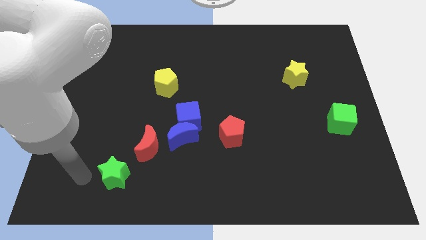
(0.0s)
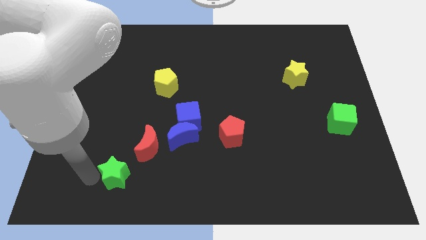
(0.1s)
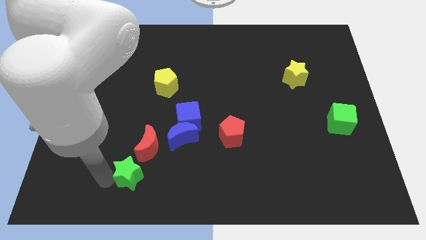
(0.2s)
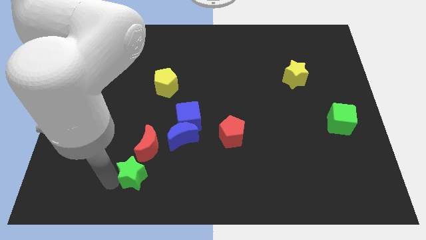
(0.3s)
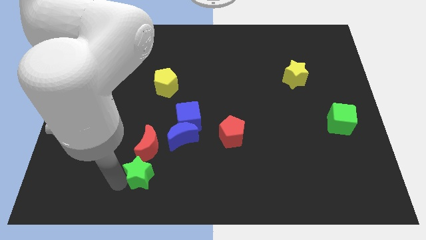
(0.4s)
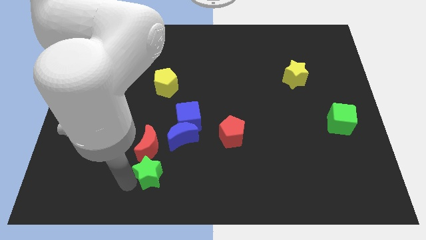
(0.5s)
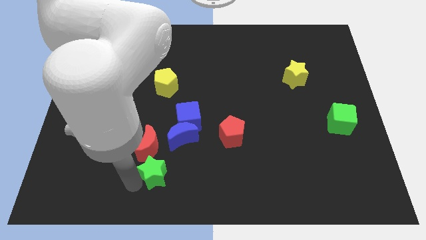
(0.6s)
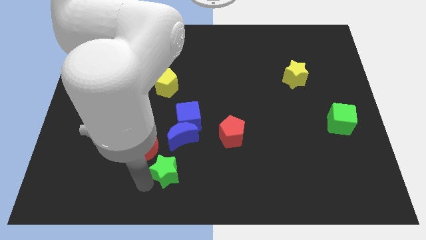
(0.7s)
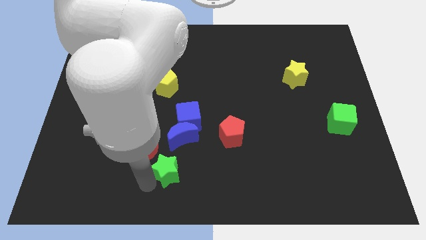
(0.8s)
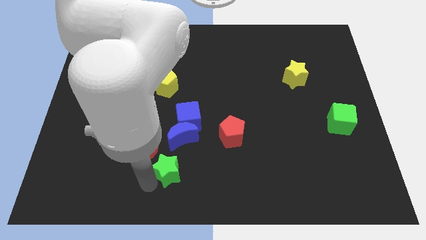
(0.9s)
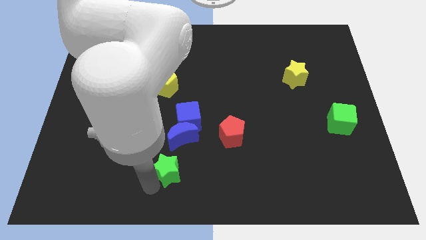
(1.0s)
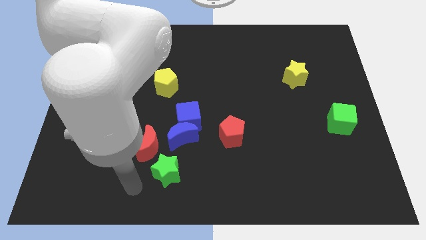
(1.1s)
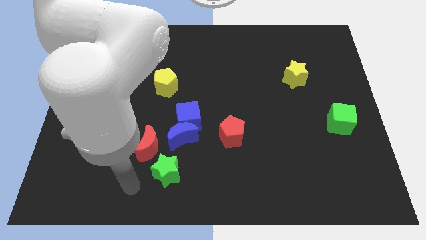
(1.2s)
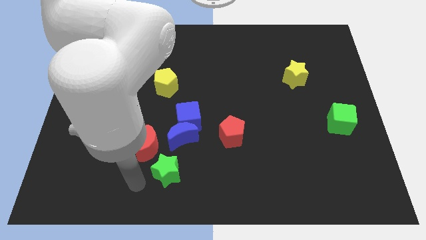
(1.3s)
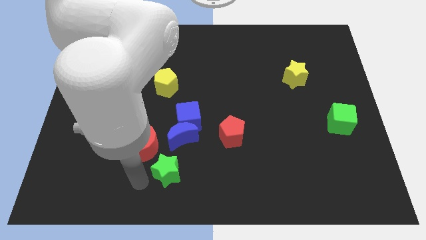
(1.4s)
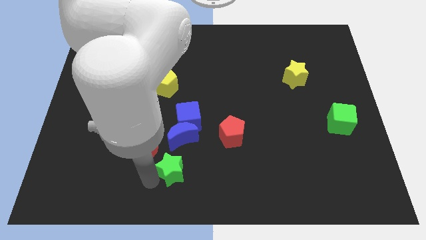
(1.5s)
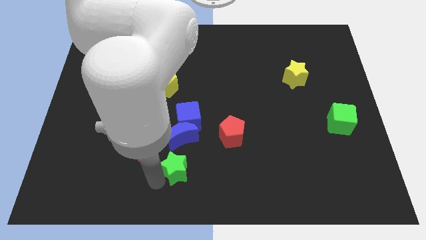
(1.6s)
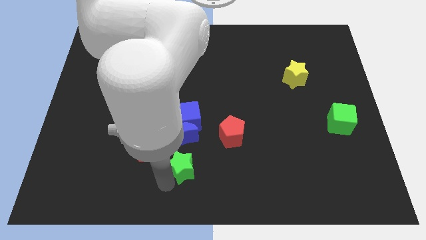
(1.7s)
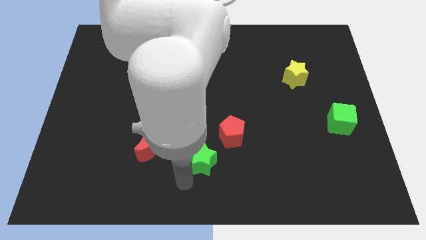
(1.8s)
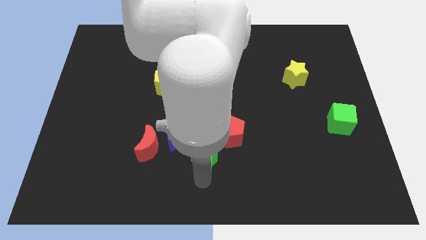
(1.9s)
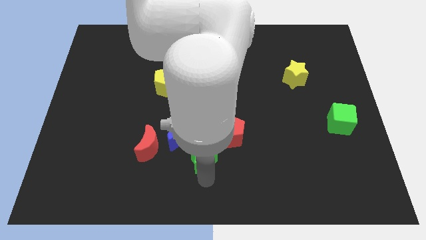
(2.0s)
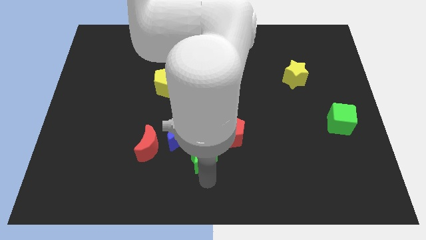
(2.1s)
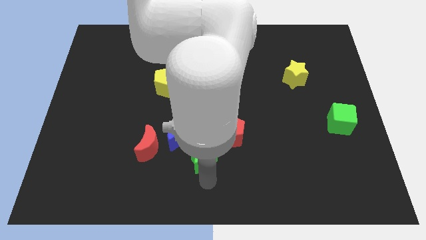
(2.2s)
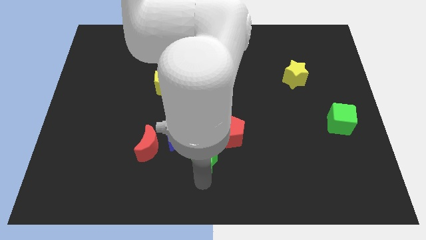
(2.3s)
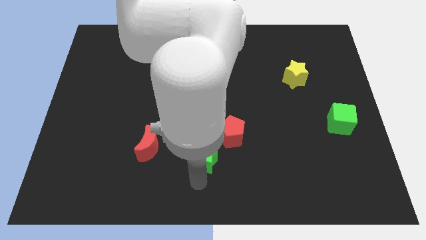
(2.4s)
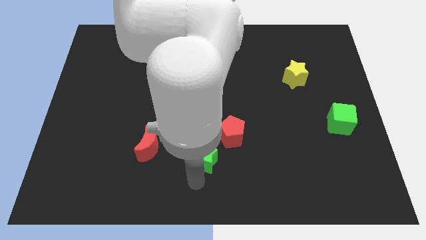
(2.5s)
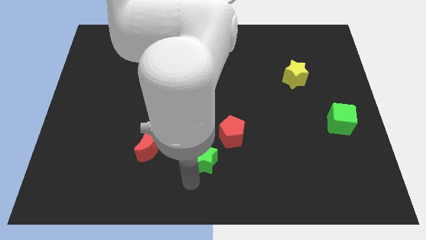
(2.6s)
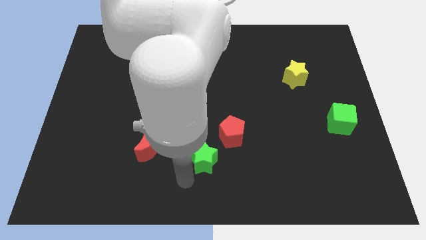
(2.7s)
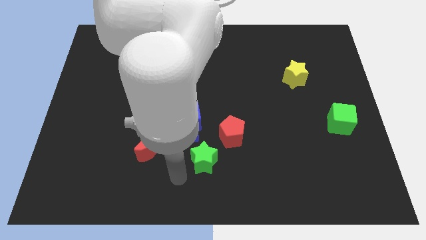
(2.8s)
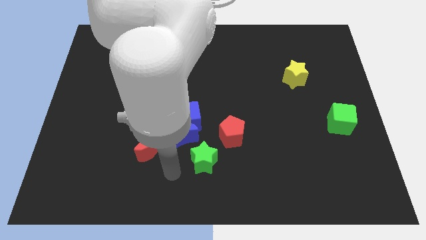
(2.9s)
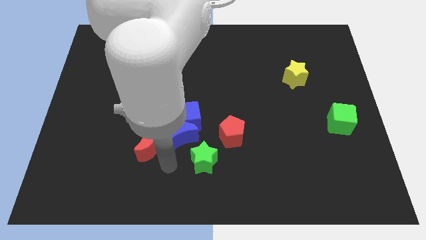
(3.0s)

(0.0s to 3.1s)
push the green star to the bottom left of the red pentagon

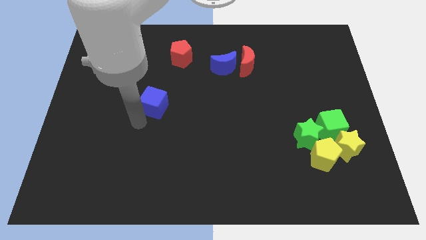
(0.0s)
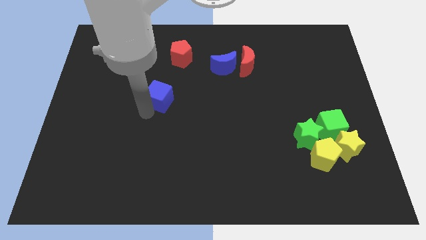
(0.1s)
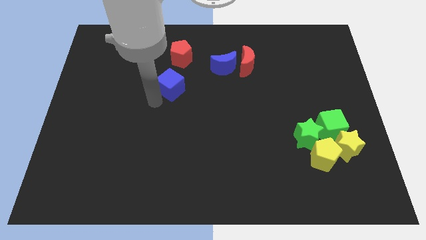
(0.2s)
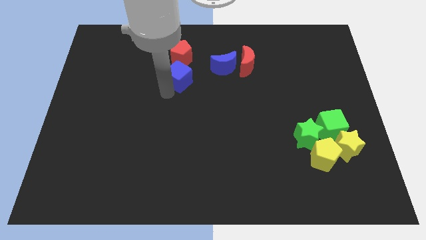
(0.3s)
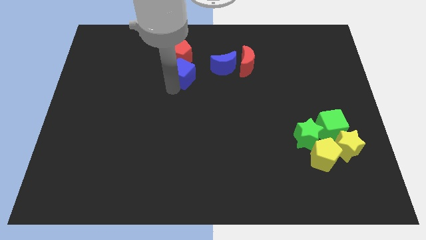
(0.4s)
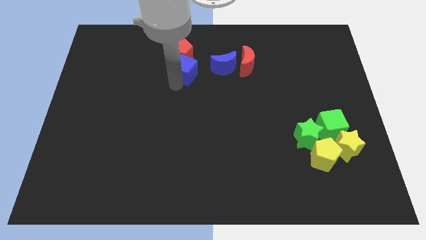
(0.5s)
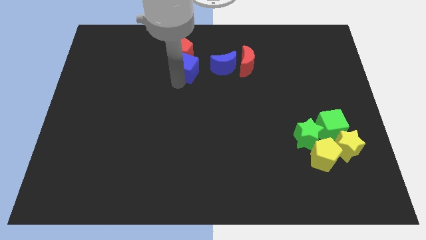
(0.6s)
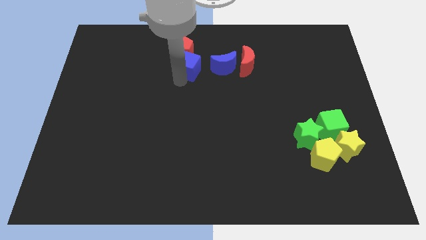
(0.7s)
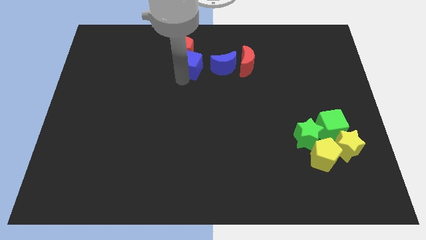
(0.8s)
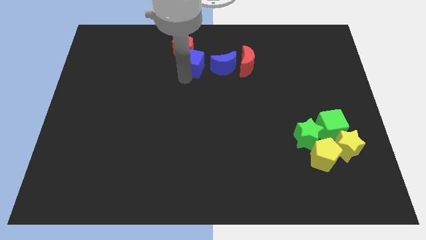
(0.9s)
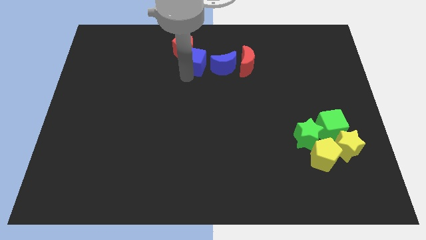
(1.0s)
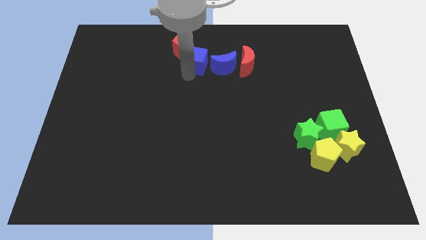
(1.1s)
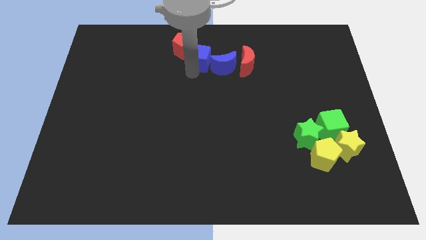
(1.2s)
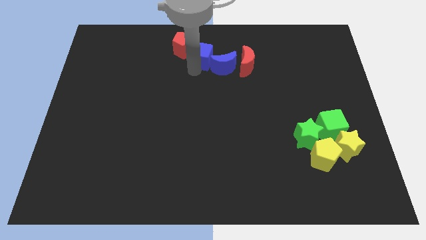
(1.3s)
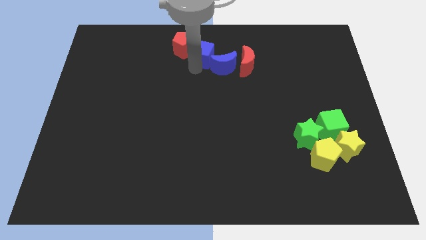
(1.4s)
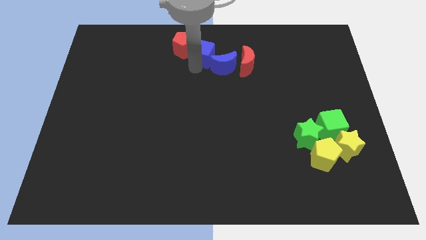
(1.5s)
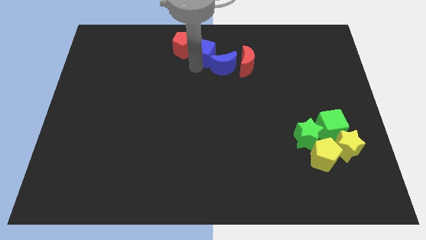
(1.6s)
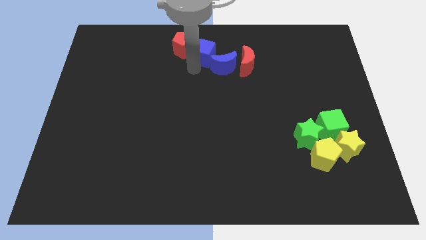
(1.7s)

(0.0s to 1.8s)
place the blue cube in between the red pentagon and blue moon

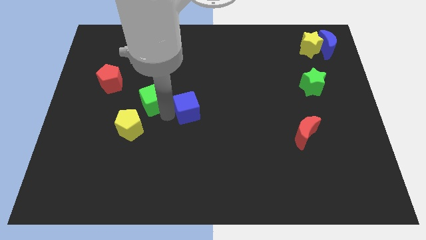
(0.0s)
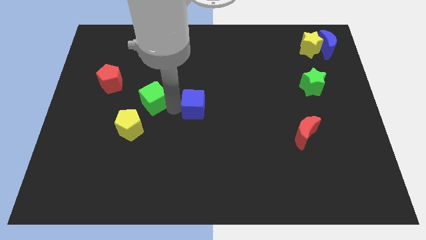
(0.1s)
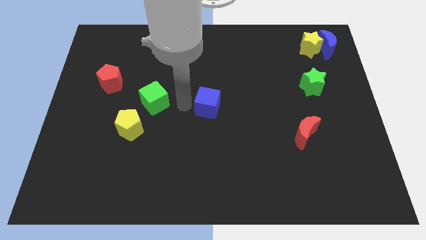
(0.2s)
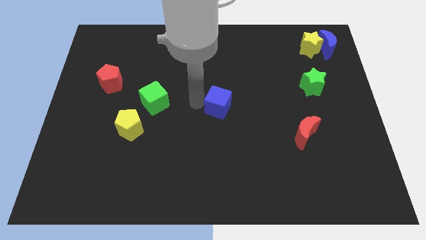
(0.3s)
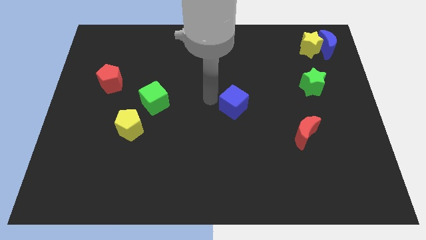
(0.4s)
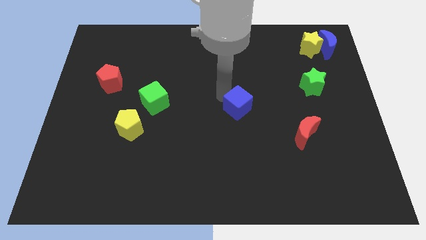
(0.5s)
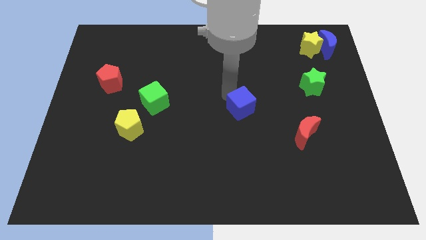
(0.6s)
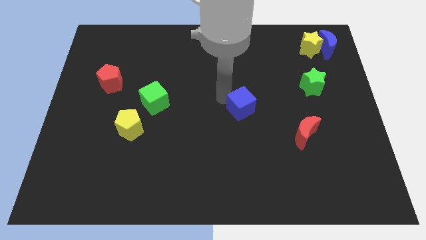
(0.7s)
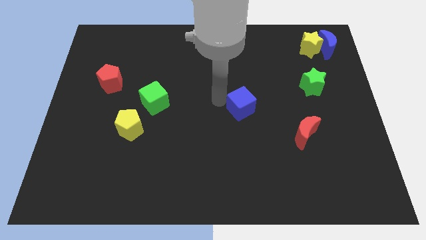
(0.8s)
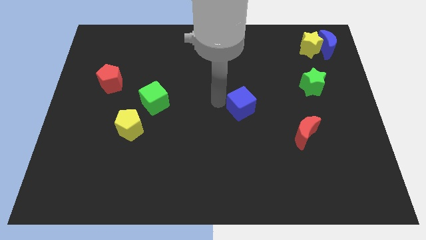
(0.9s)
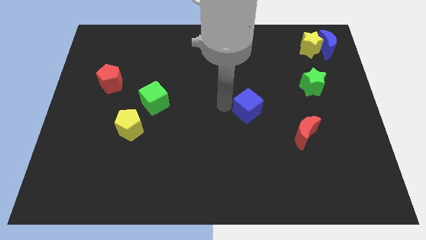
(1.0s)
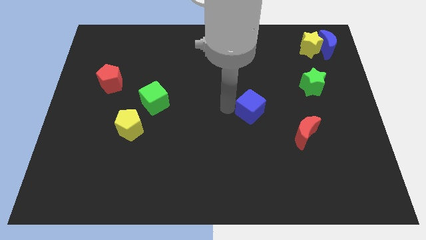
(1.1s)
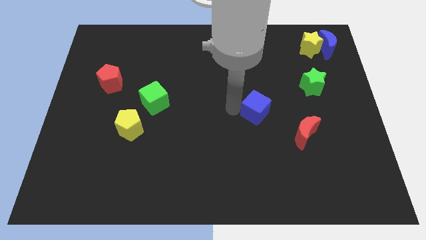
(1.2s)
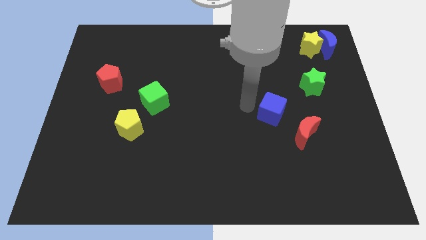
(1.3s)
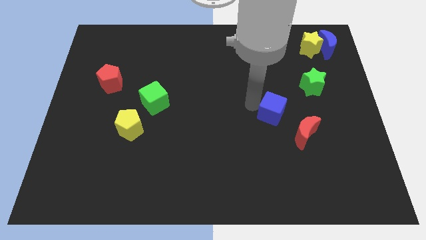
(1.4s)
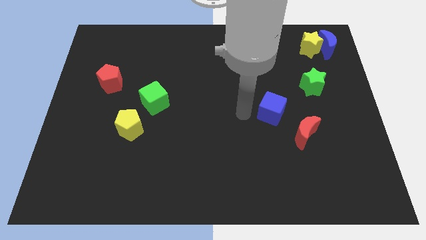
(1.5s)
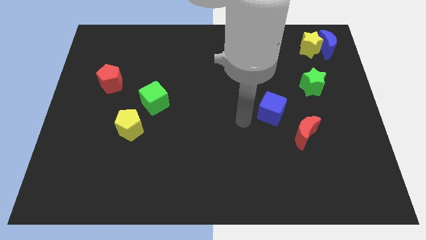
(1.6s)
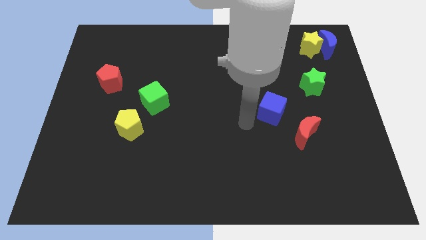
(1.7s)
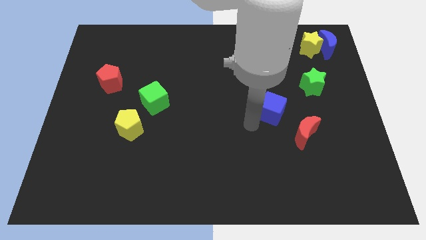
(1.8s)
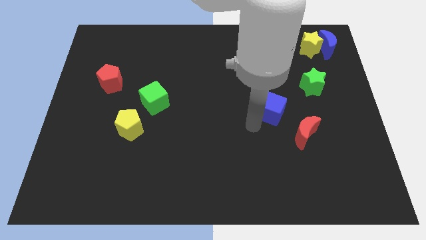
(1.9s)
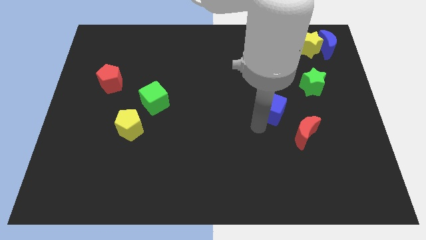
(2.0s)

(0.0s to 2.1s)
separate green cube from the blue cube

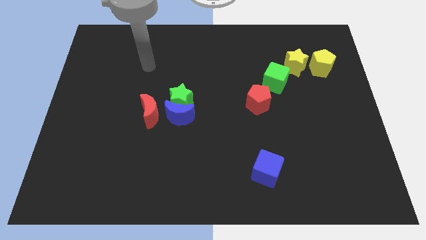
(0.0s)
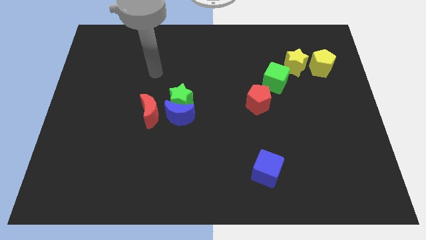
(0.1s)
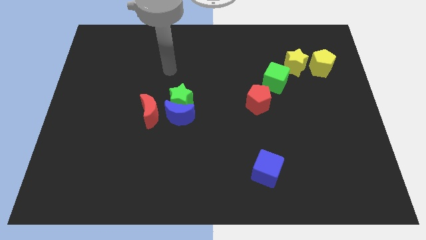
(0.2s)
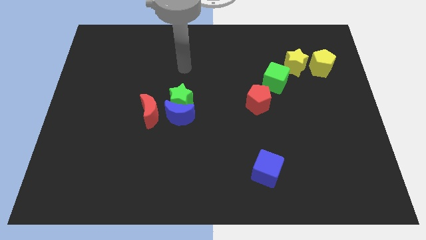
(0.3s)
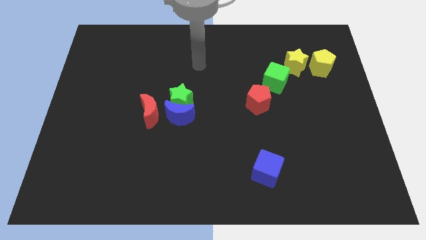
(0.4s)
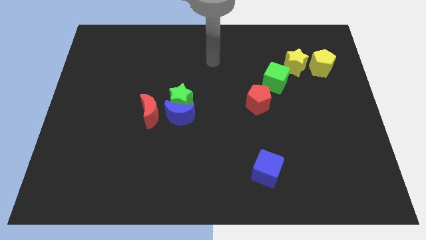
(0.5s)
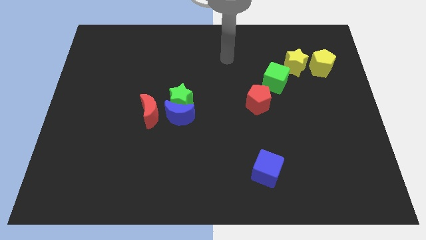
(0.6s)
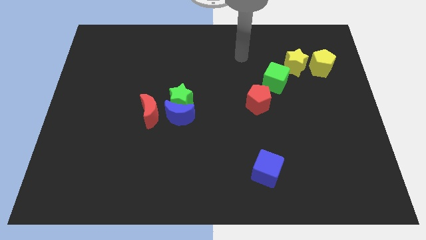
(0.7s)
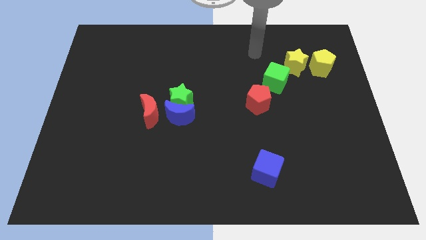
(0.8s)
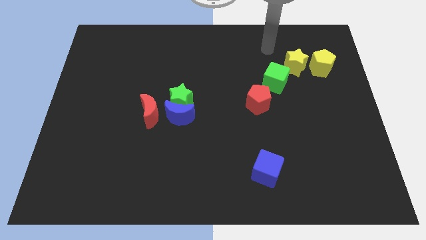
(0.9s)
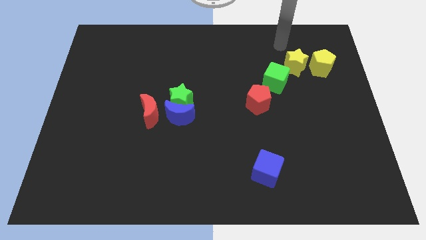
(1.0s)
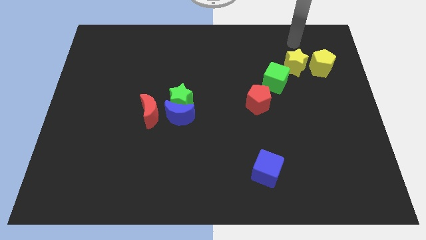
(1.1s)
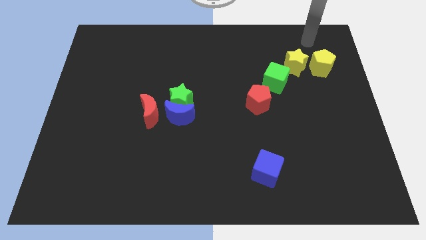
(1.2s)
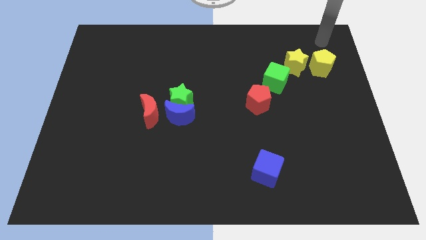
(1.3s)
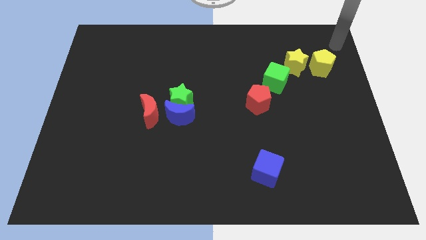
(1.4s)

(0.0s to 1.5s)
move your arm towards the right side of the board

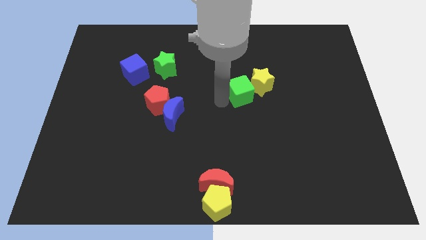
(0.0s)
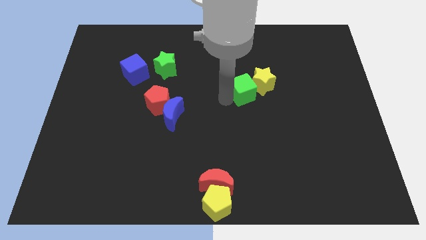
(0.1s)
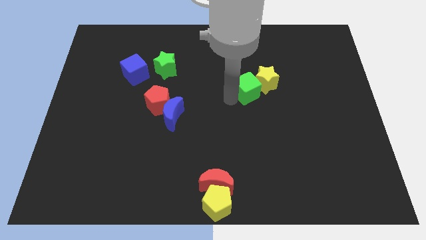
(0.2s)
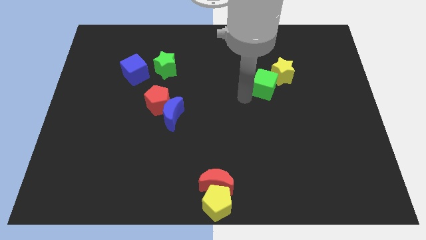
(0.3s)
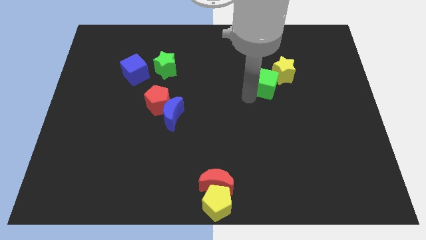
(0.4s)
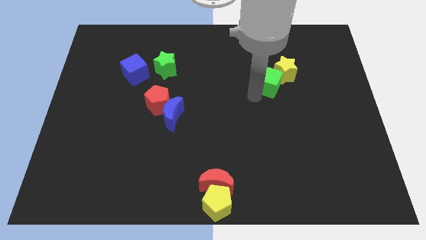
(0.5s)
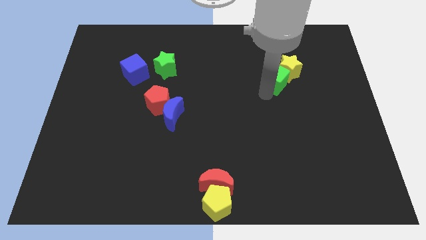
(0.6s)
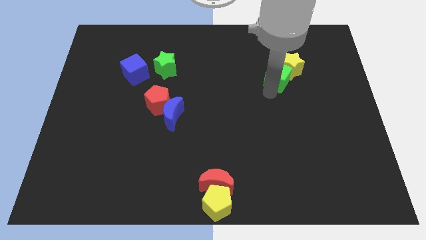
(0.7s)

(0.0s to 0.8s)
move the green cube along with the yellow star towards the top right
